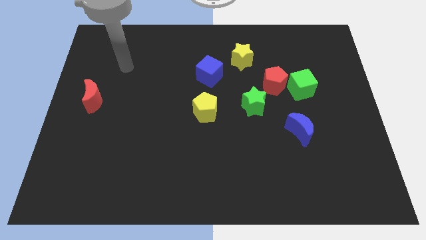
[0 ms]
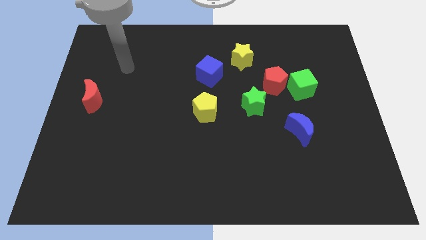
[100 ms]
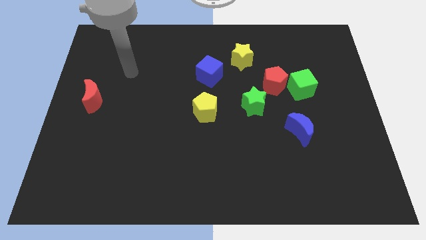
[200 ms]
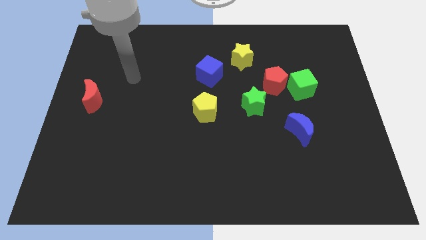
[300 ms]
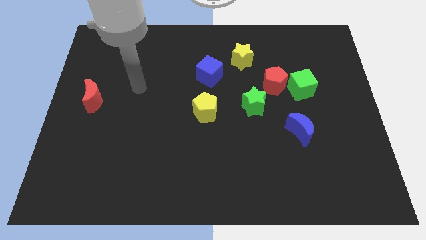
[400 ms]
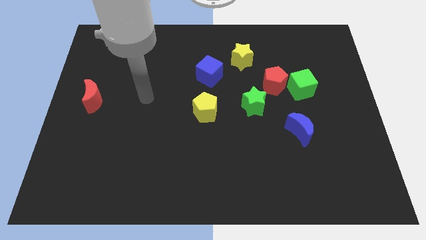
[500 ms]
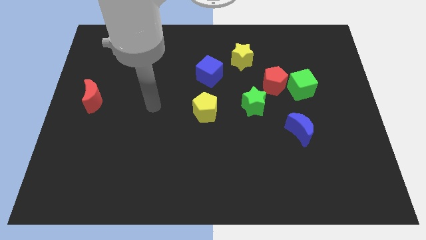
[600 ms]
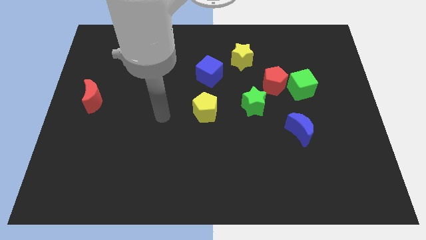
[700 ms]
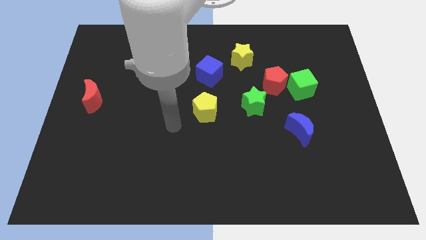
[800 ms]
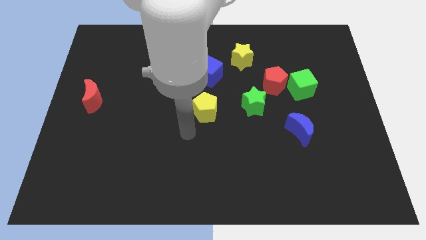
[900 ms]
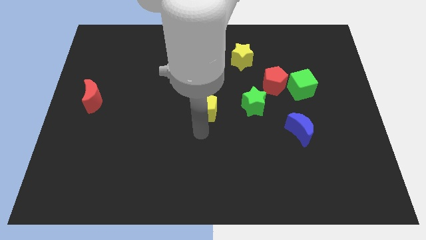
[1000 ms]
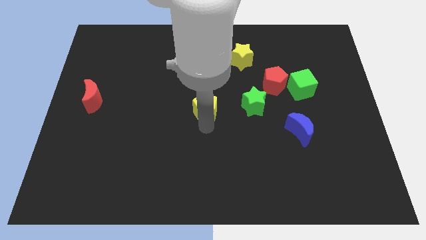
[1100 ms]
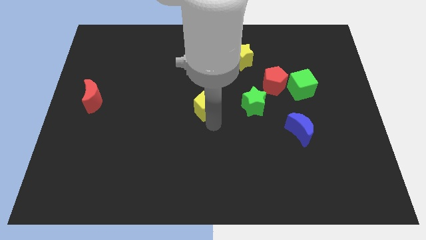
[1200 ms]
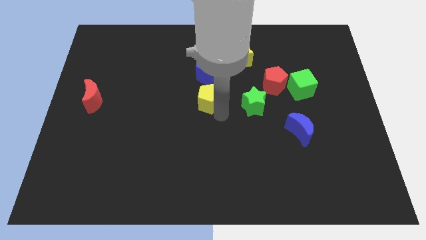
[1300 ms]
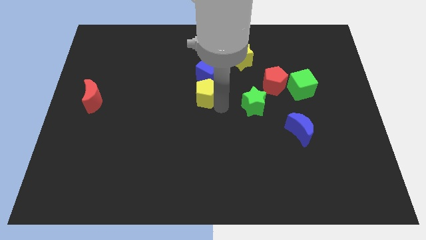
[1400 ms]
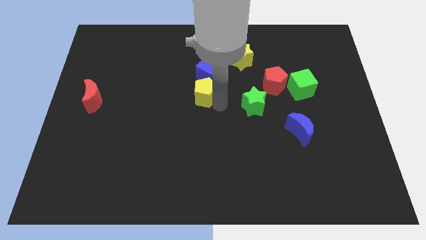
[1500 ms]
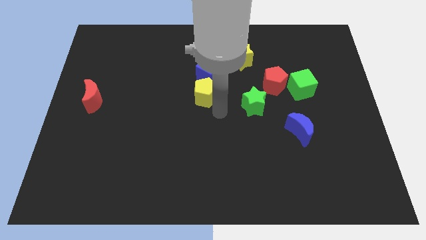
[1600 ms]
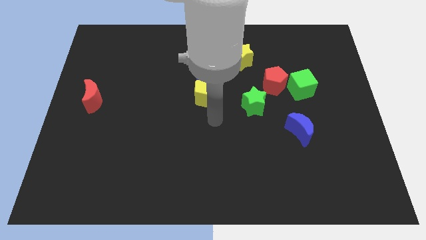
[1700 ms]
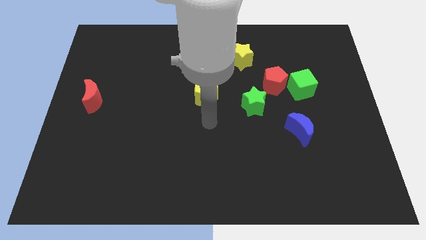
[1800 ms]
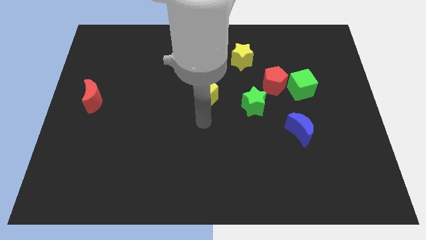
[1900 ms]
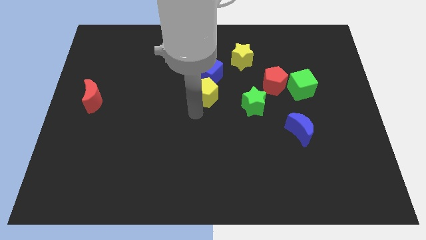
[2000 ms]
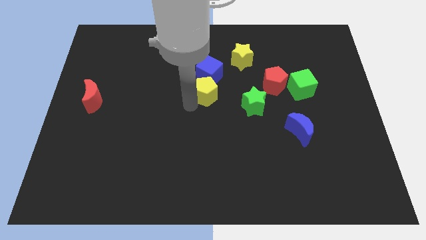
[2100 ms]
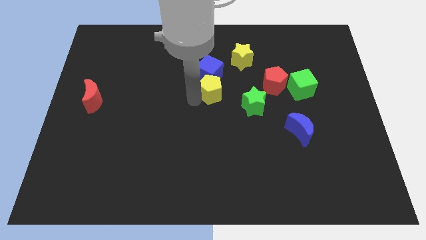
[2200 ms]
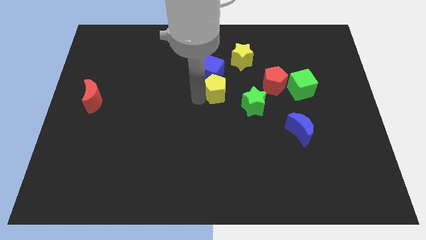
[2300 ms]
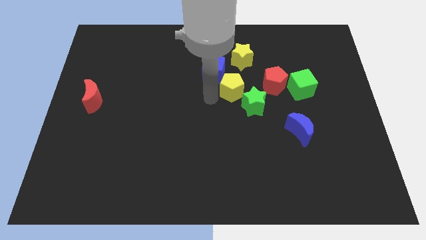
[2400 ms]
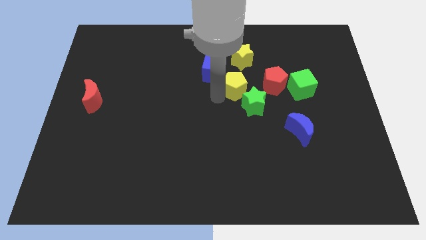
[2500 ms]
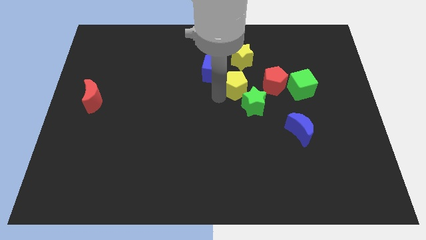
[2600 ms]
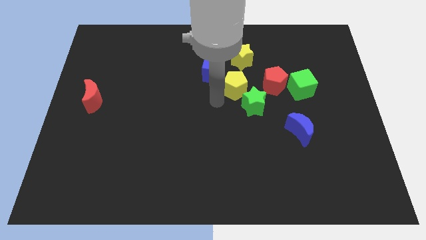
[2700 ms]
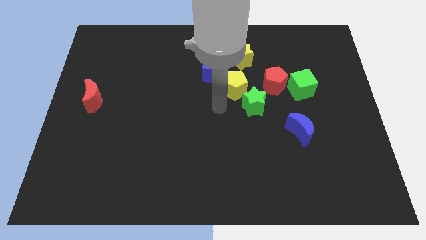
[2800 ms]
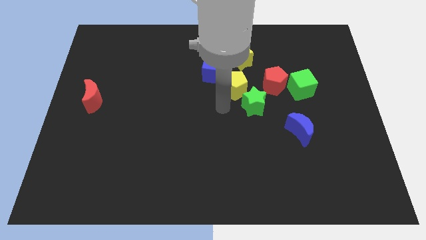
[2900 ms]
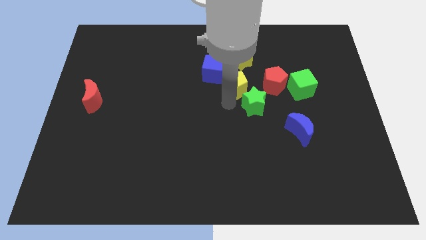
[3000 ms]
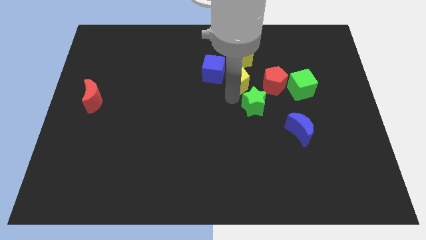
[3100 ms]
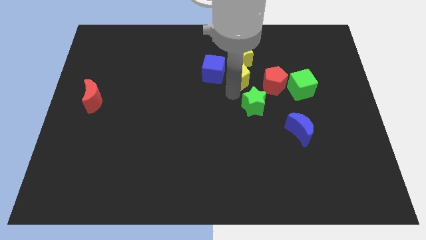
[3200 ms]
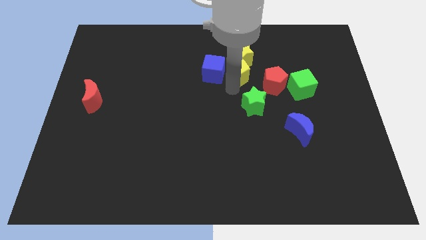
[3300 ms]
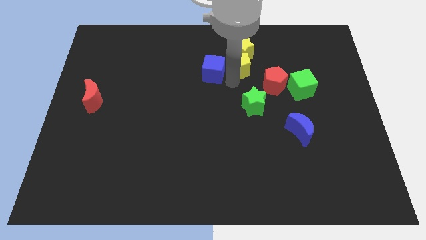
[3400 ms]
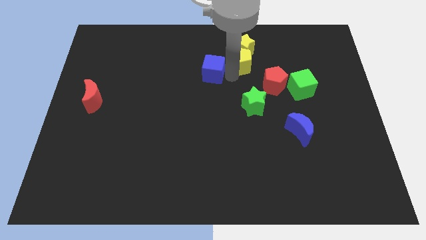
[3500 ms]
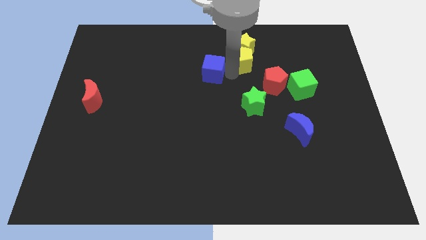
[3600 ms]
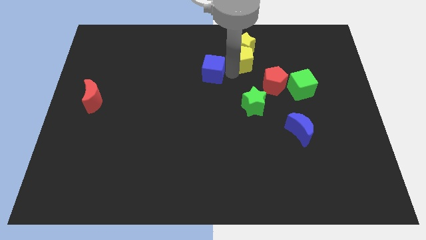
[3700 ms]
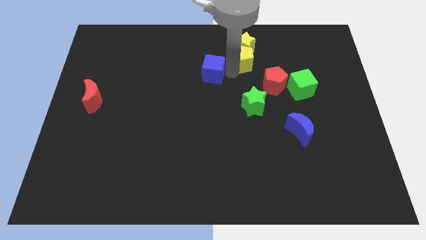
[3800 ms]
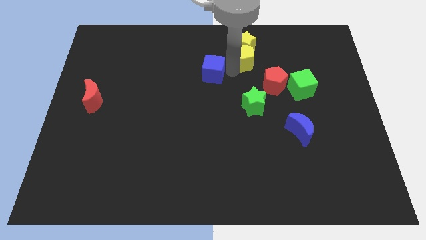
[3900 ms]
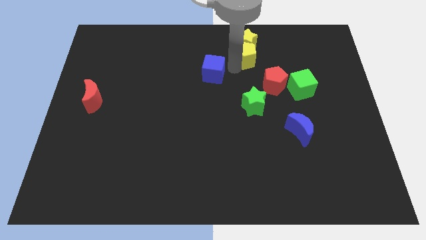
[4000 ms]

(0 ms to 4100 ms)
push the yellow pentagon into yellow star

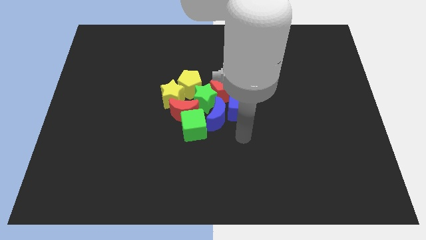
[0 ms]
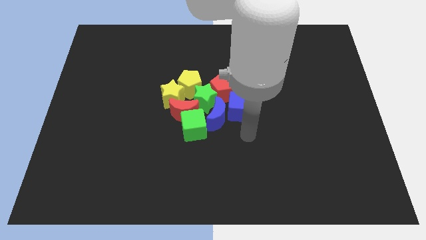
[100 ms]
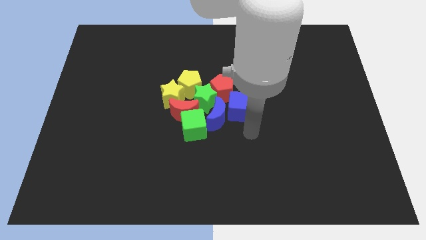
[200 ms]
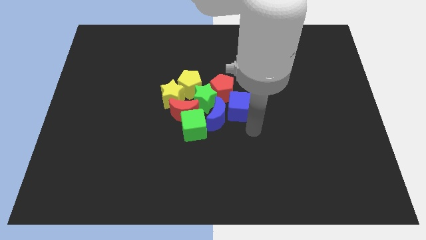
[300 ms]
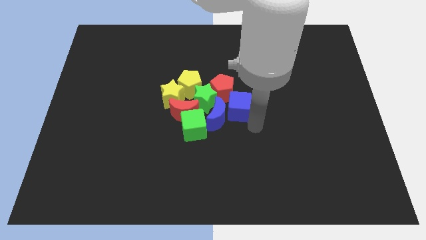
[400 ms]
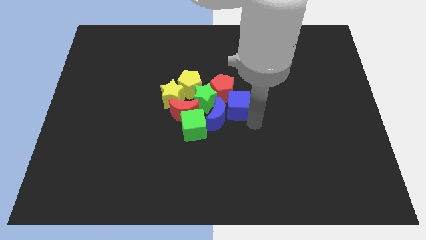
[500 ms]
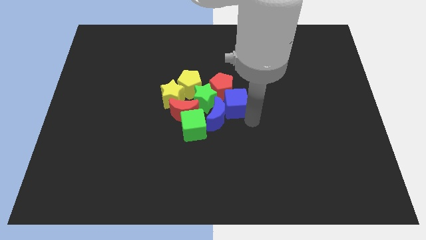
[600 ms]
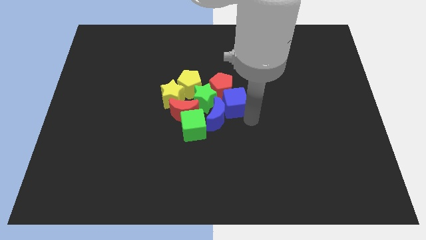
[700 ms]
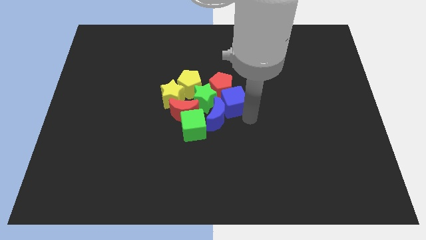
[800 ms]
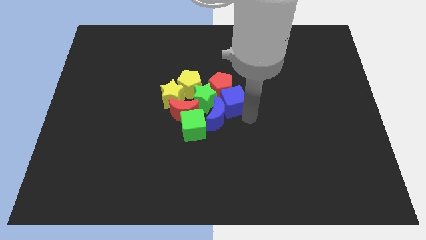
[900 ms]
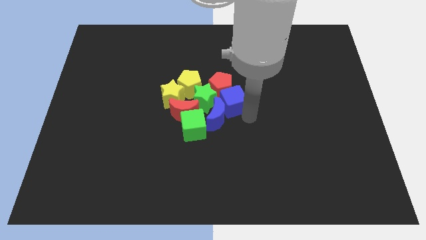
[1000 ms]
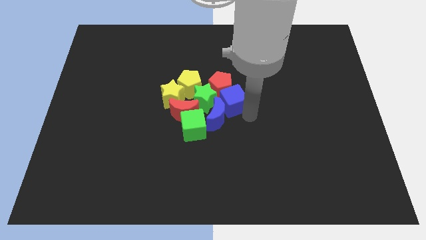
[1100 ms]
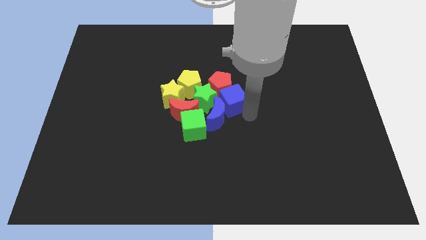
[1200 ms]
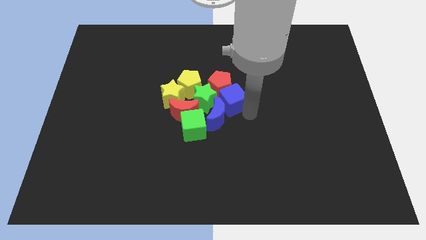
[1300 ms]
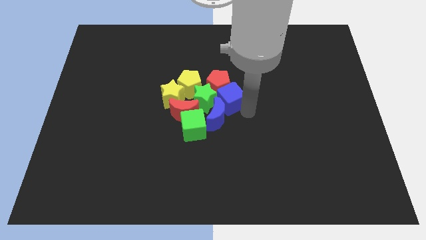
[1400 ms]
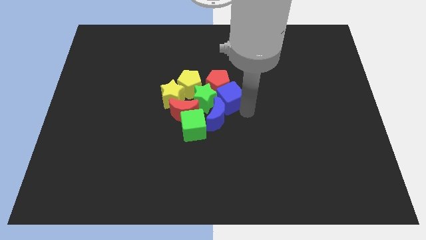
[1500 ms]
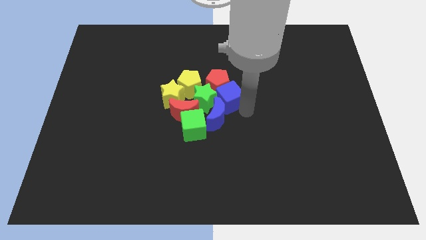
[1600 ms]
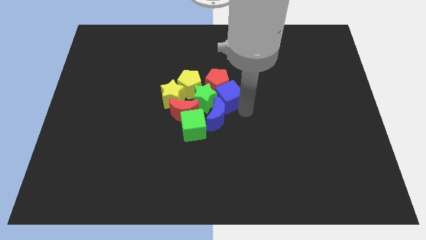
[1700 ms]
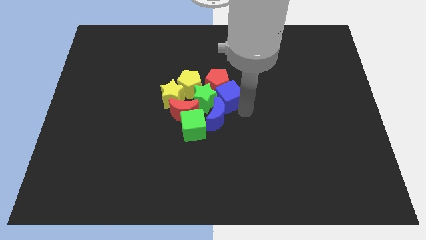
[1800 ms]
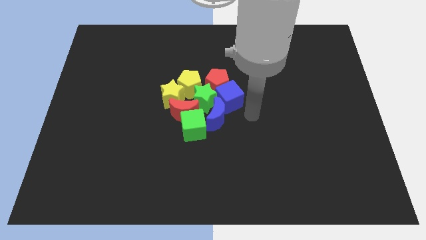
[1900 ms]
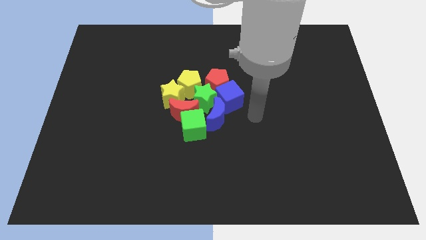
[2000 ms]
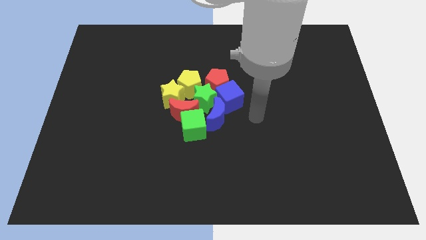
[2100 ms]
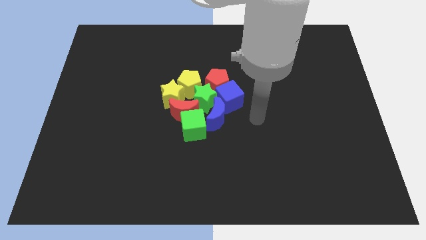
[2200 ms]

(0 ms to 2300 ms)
push the blue cube into the group of blocks

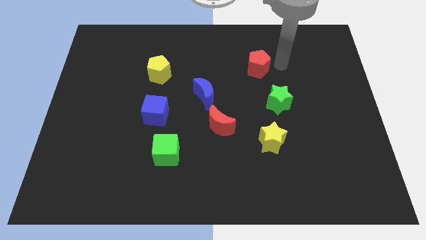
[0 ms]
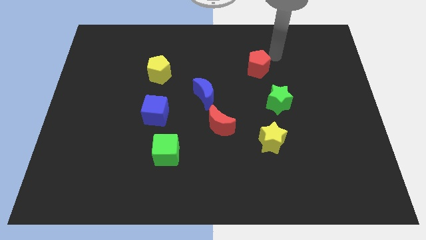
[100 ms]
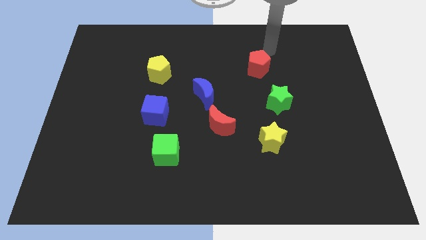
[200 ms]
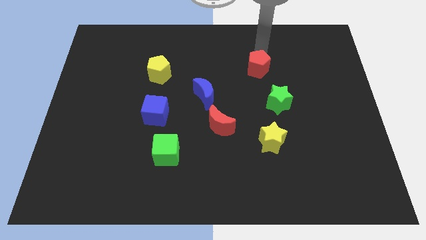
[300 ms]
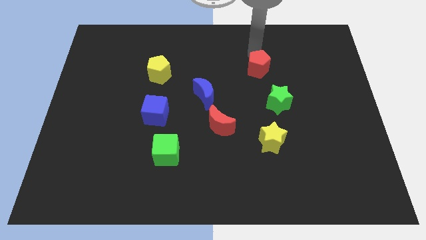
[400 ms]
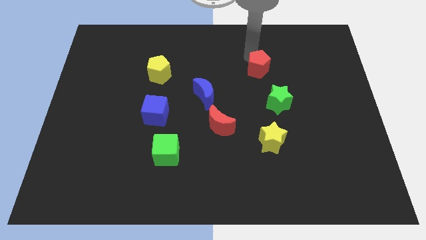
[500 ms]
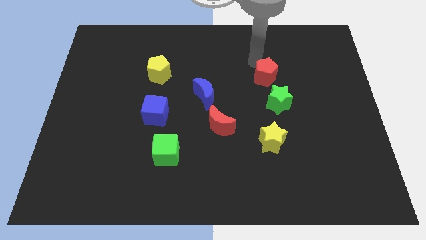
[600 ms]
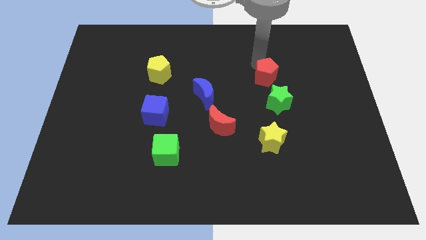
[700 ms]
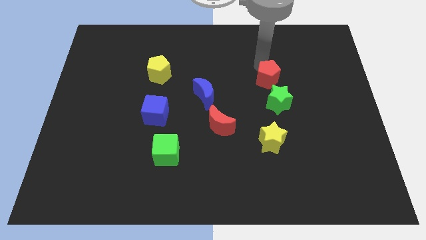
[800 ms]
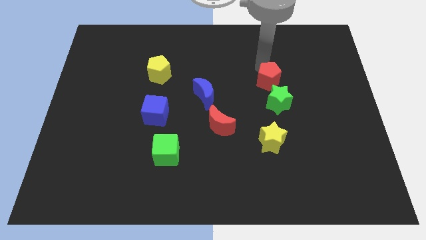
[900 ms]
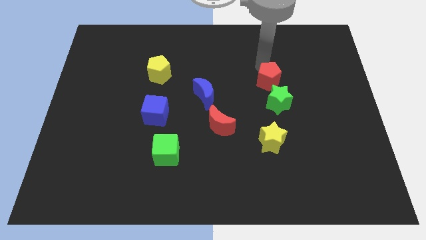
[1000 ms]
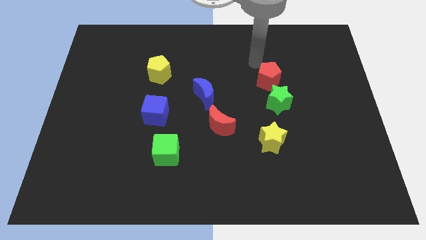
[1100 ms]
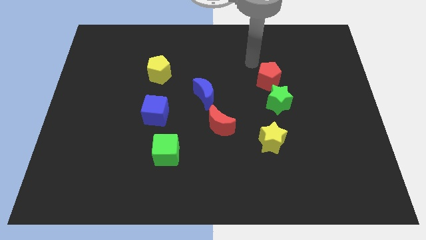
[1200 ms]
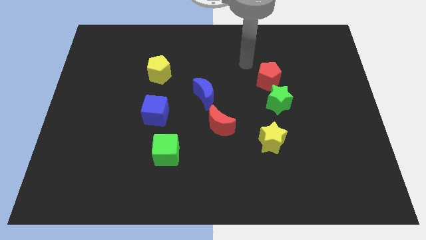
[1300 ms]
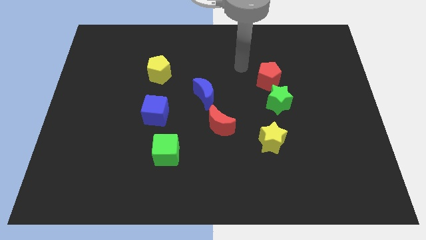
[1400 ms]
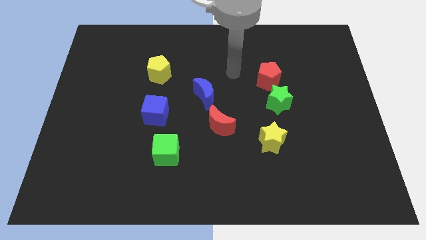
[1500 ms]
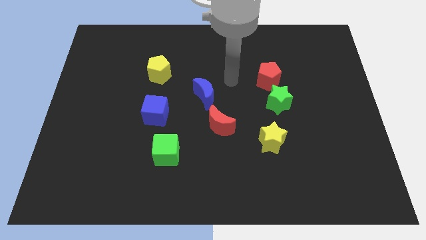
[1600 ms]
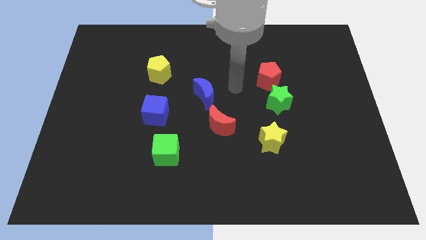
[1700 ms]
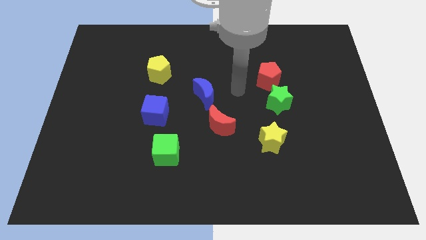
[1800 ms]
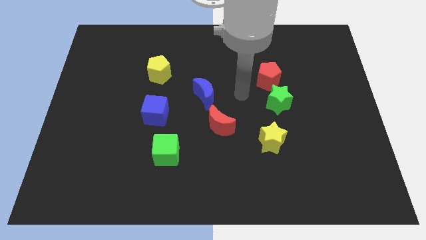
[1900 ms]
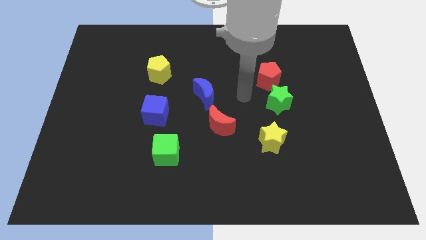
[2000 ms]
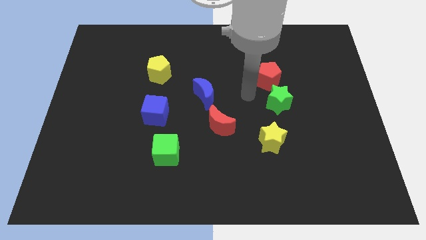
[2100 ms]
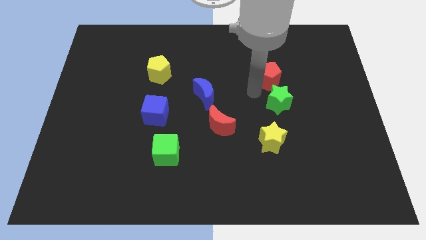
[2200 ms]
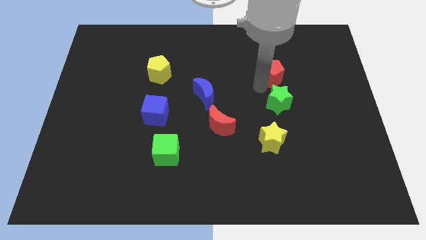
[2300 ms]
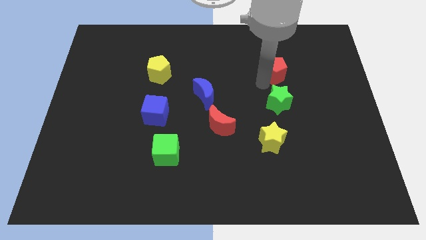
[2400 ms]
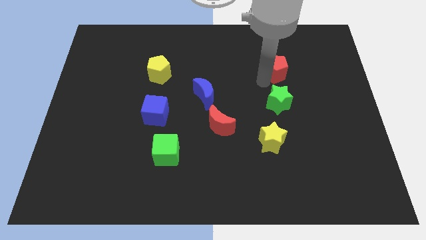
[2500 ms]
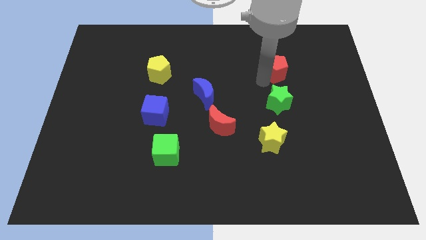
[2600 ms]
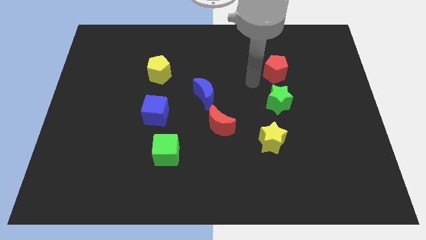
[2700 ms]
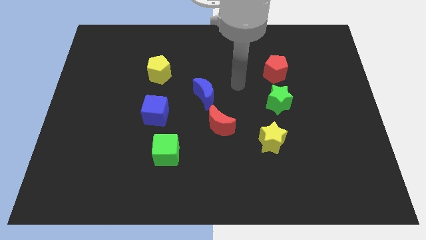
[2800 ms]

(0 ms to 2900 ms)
move the red pentagon vertically above to the green star
